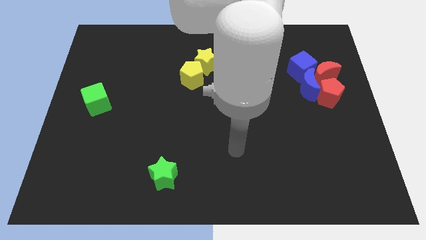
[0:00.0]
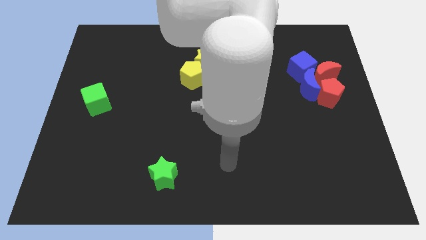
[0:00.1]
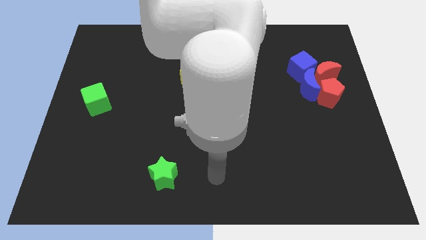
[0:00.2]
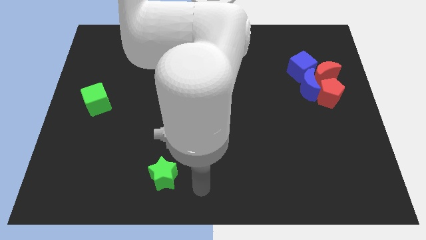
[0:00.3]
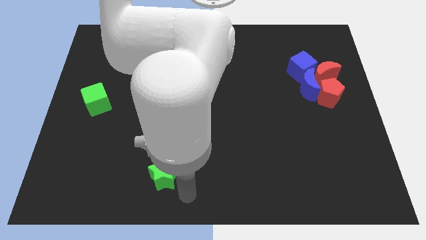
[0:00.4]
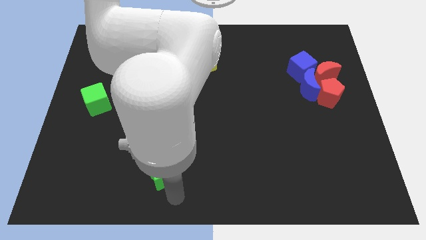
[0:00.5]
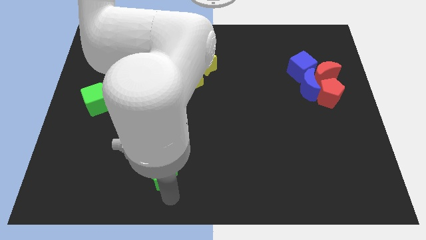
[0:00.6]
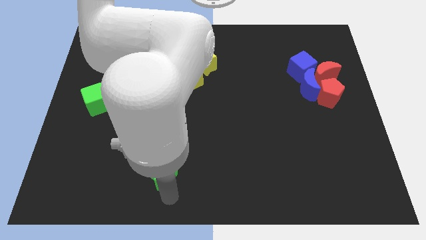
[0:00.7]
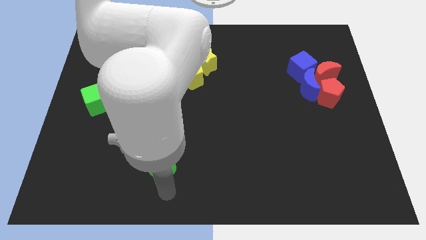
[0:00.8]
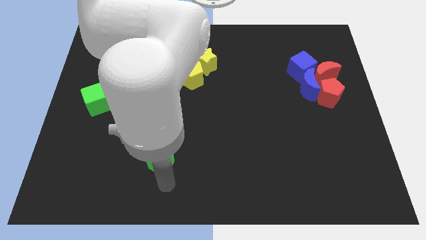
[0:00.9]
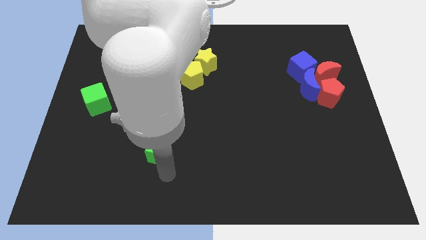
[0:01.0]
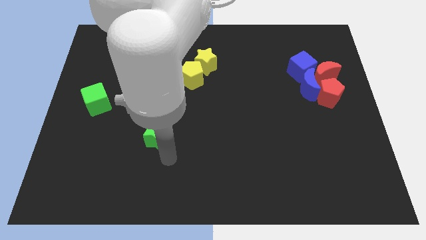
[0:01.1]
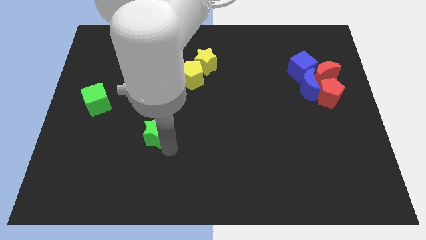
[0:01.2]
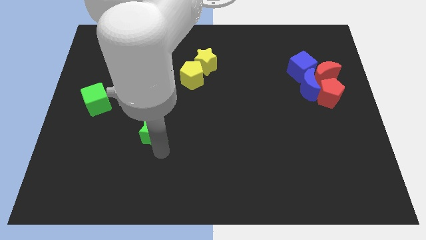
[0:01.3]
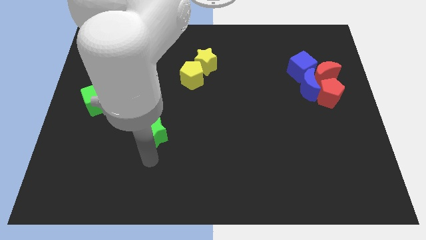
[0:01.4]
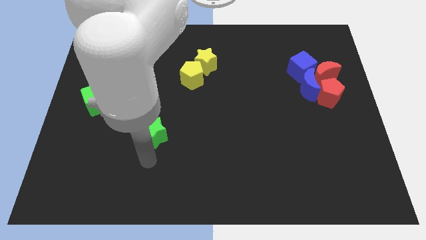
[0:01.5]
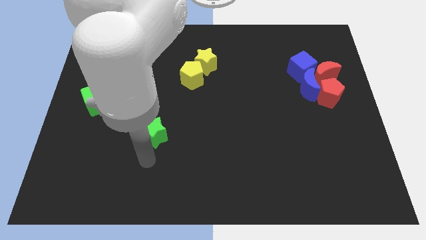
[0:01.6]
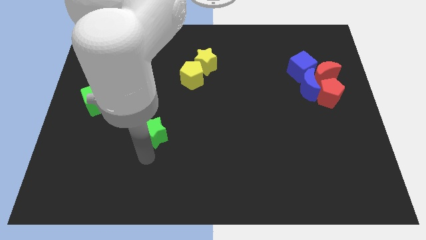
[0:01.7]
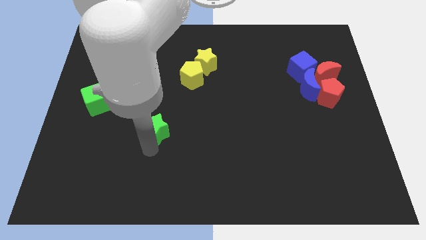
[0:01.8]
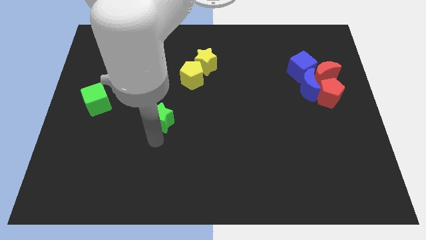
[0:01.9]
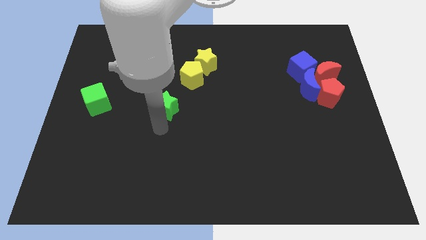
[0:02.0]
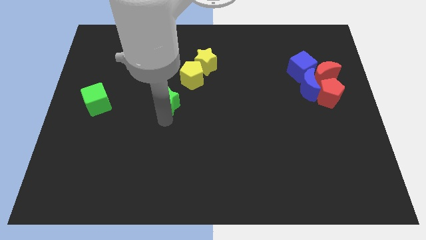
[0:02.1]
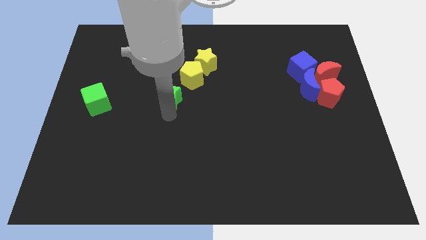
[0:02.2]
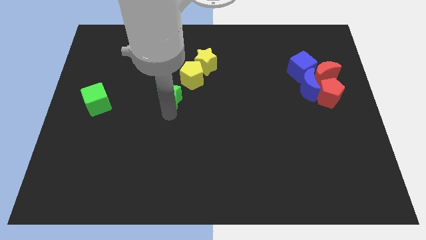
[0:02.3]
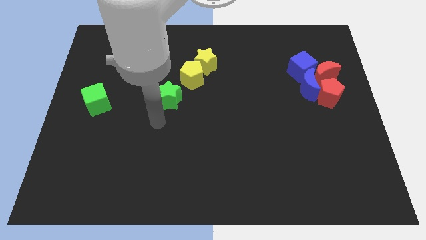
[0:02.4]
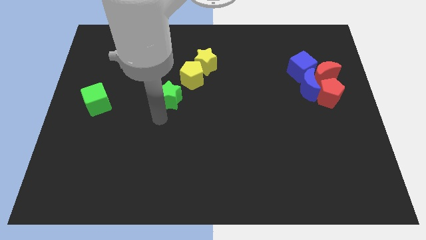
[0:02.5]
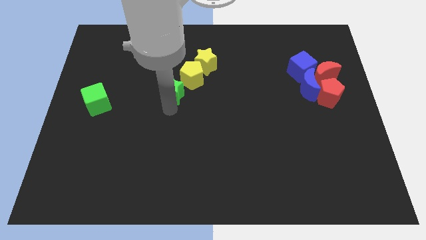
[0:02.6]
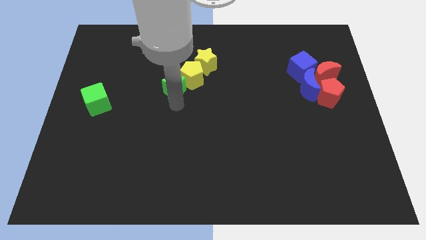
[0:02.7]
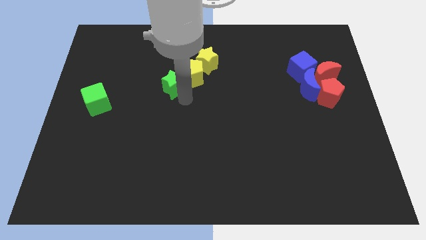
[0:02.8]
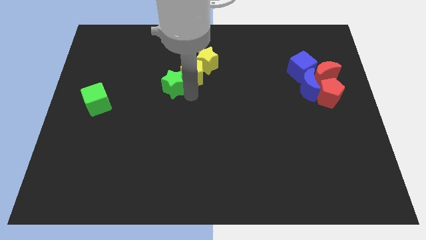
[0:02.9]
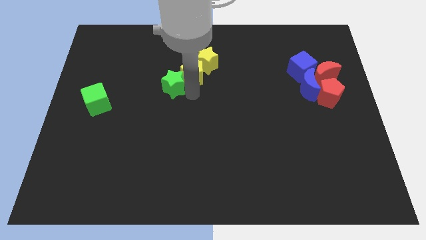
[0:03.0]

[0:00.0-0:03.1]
slide the green star into the yellow pentagon

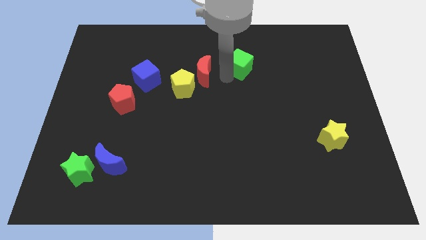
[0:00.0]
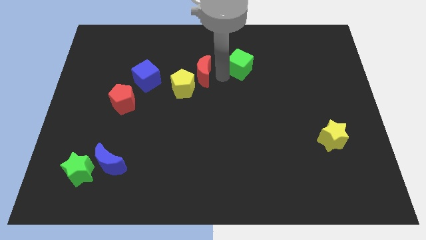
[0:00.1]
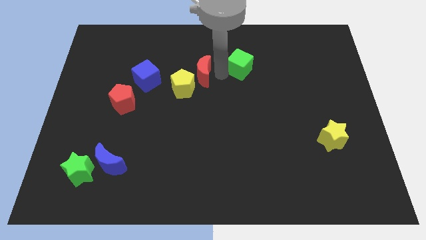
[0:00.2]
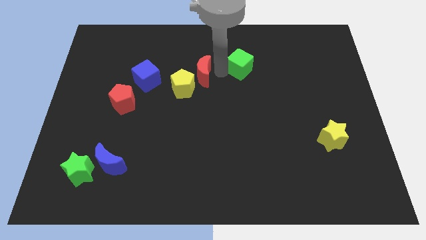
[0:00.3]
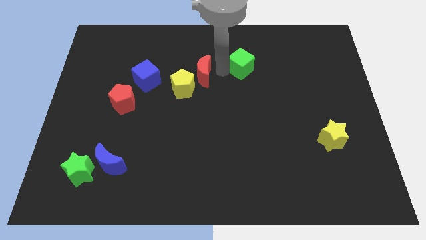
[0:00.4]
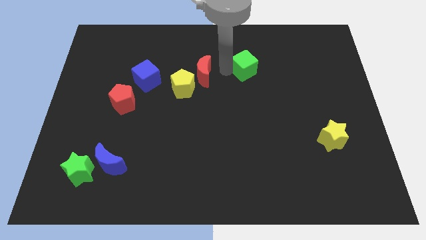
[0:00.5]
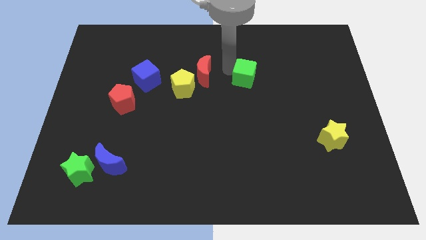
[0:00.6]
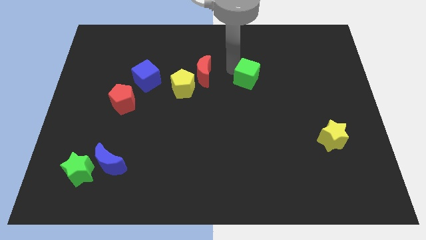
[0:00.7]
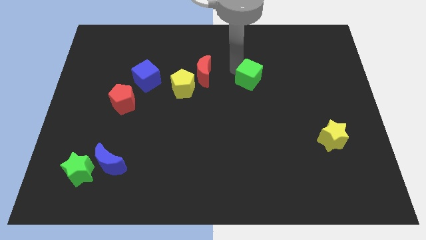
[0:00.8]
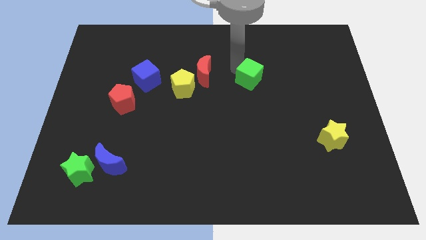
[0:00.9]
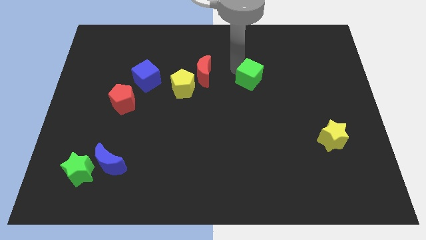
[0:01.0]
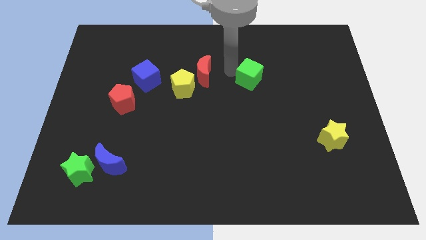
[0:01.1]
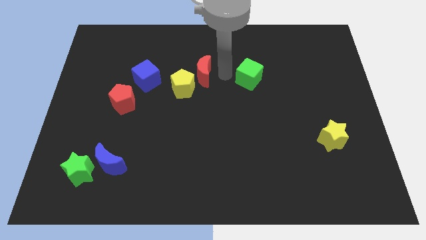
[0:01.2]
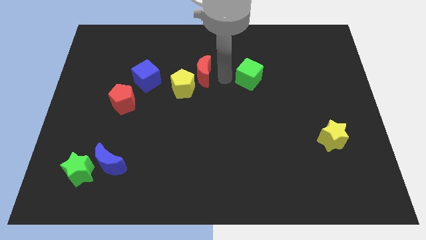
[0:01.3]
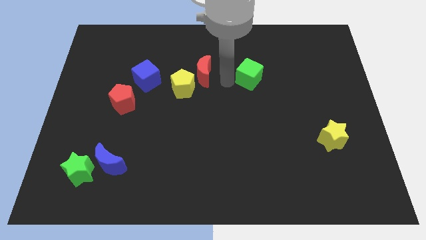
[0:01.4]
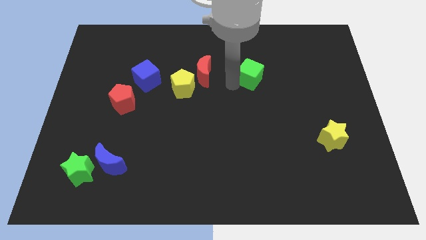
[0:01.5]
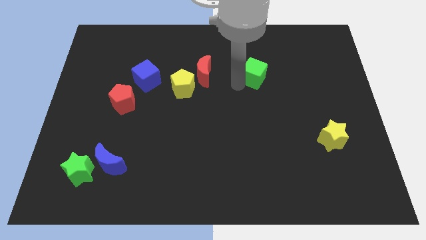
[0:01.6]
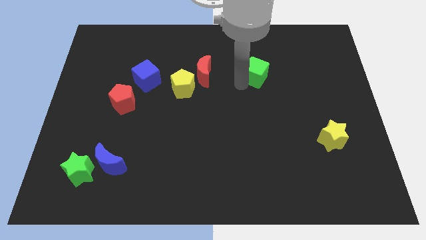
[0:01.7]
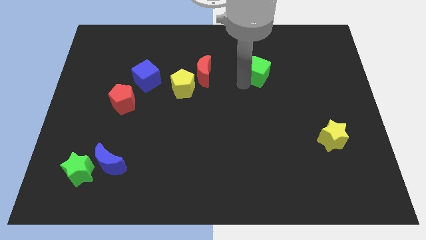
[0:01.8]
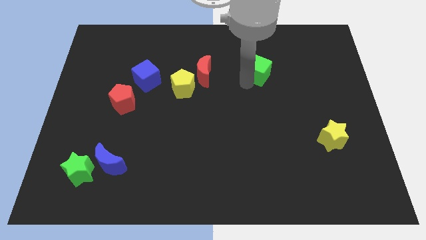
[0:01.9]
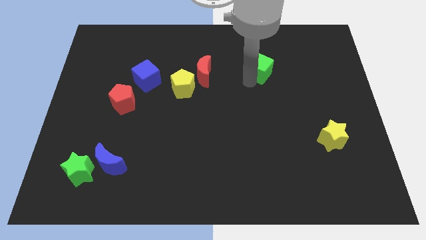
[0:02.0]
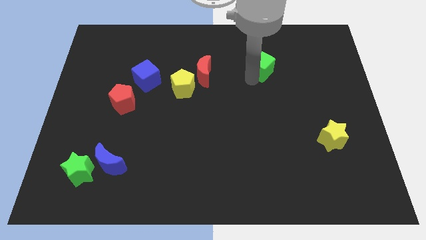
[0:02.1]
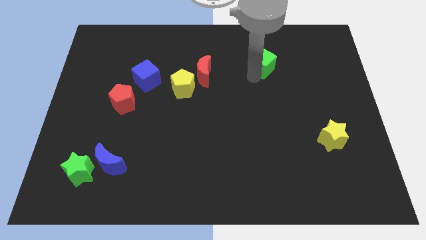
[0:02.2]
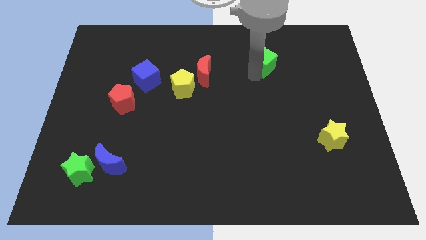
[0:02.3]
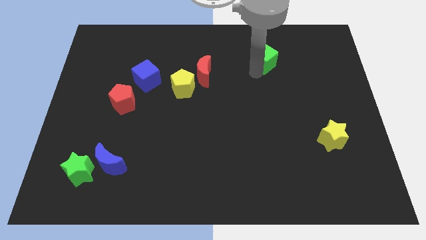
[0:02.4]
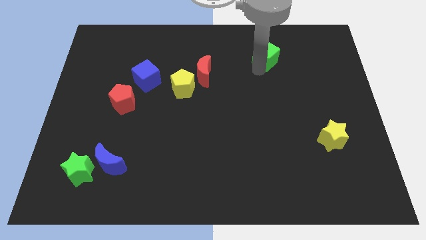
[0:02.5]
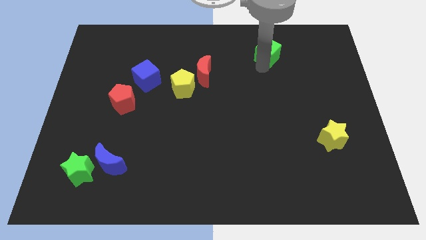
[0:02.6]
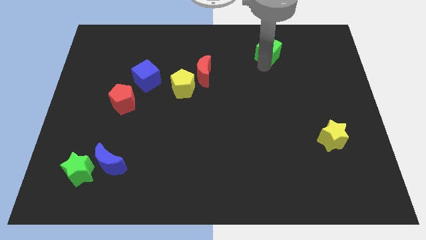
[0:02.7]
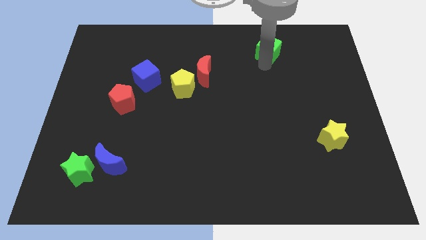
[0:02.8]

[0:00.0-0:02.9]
move the green cube to the top right side of the board

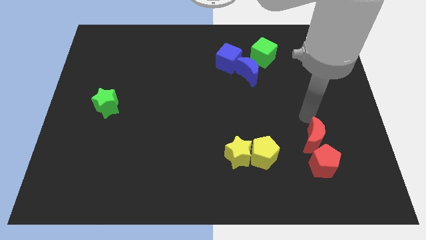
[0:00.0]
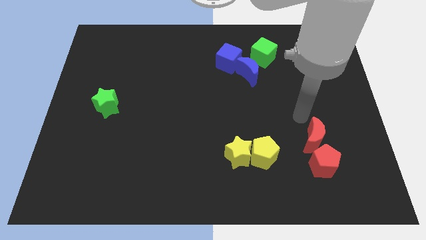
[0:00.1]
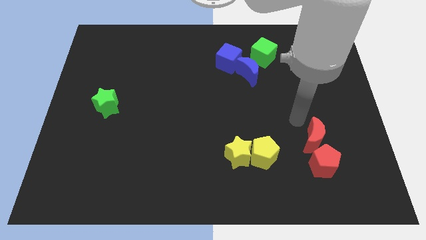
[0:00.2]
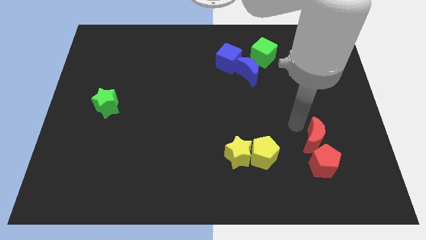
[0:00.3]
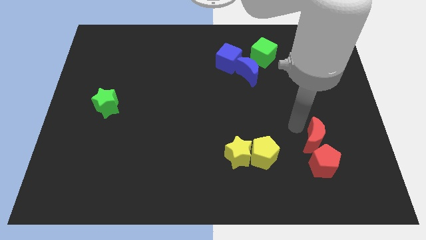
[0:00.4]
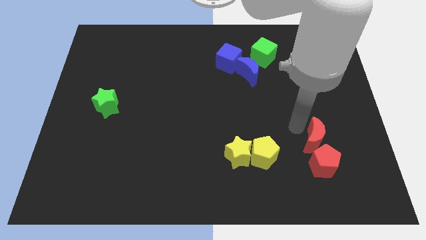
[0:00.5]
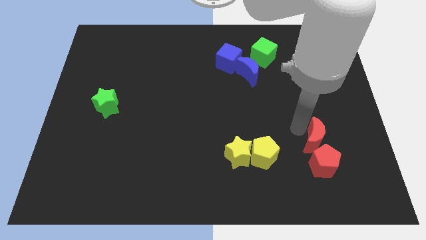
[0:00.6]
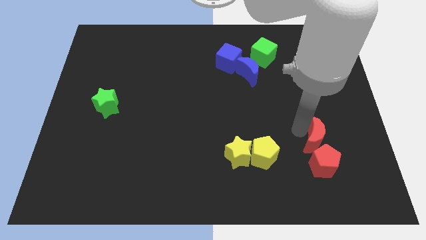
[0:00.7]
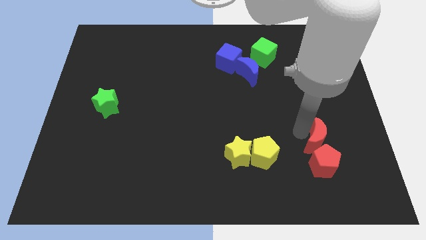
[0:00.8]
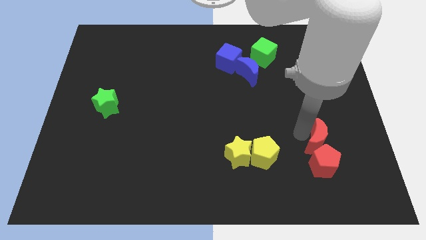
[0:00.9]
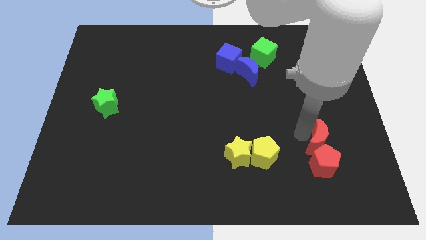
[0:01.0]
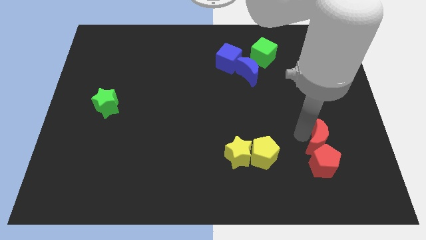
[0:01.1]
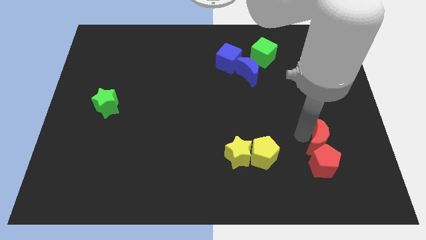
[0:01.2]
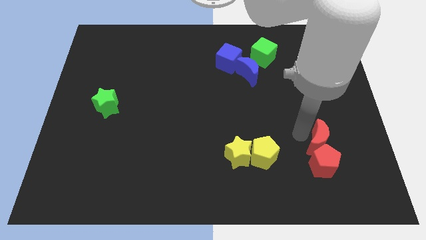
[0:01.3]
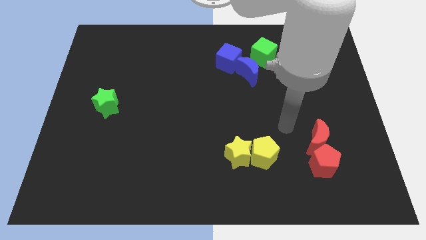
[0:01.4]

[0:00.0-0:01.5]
push the red crescent close to the red pentagon

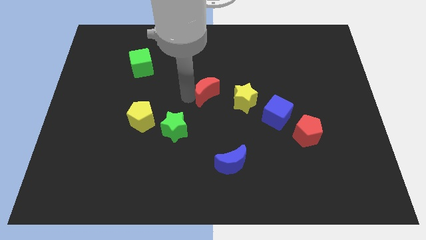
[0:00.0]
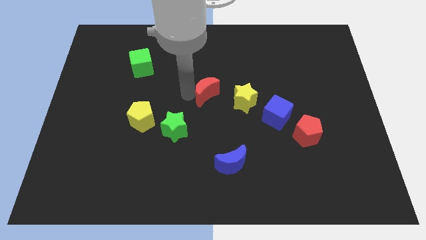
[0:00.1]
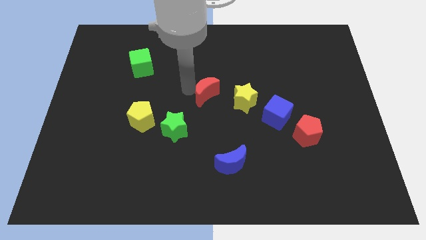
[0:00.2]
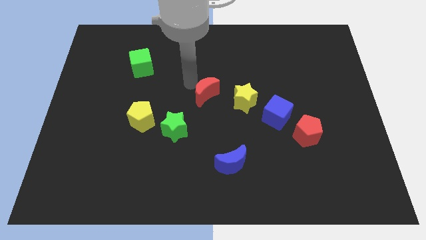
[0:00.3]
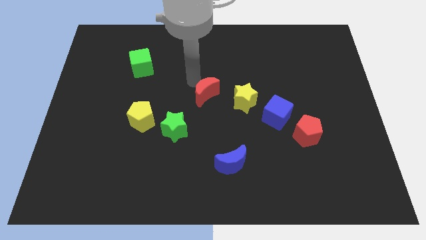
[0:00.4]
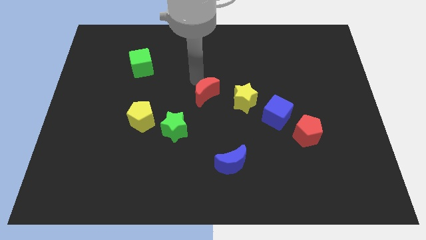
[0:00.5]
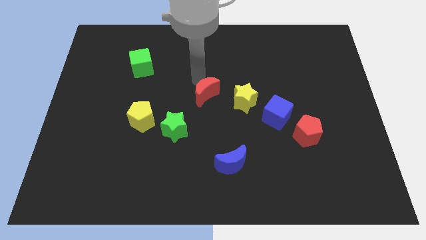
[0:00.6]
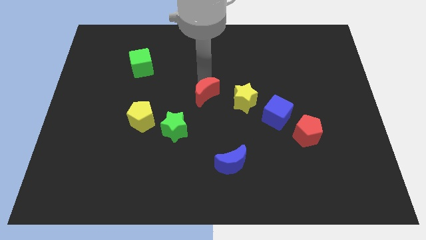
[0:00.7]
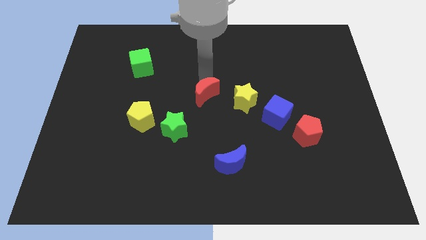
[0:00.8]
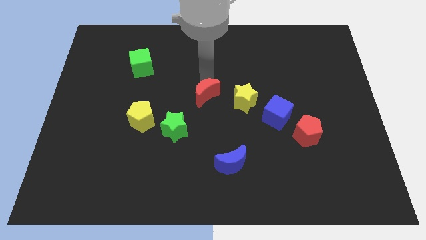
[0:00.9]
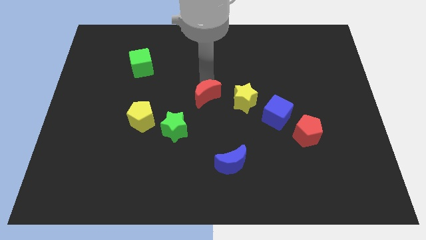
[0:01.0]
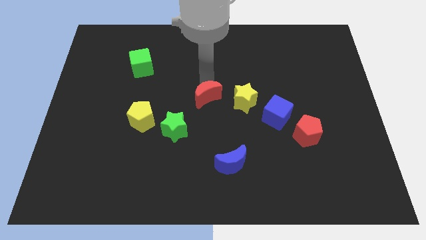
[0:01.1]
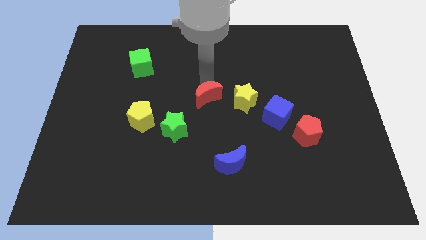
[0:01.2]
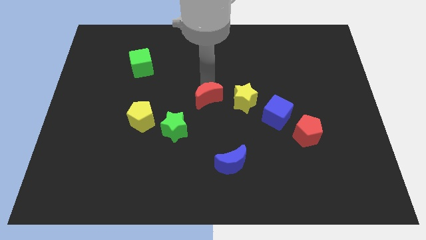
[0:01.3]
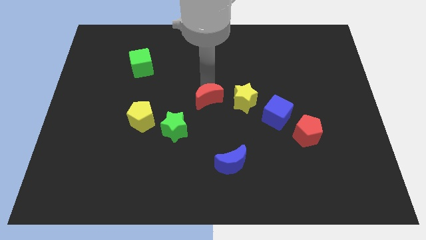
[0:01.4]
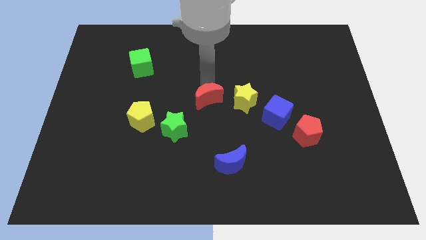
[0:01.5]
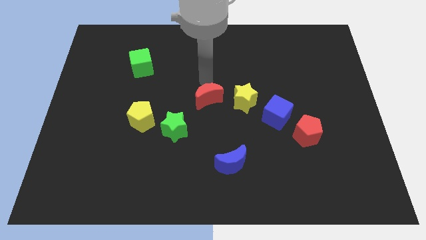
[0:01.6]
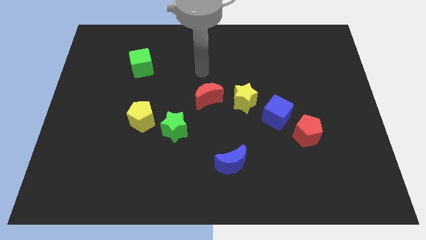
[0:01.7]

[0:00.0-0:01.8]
slightly push the red moon towards the bottom side
